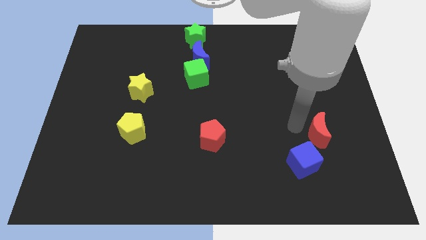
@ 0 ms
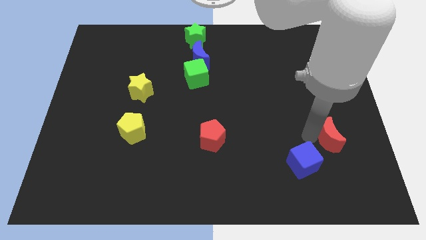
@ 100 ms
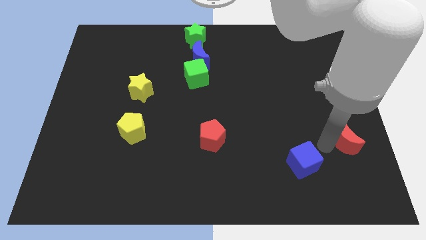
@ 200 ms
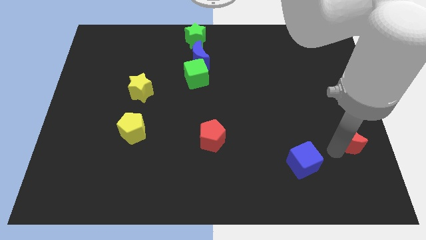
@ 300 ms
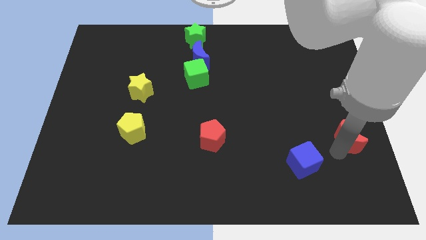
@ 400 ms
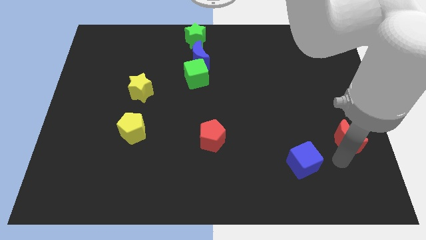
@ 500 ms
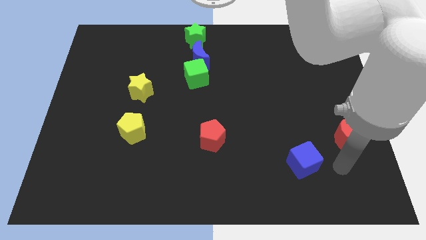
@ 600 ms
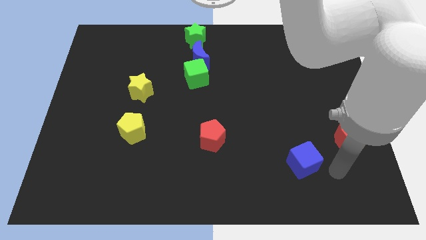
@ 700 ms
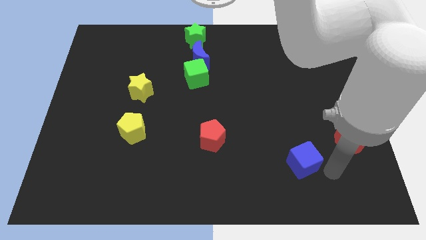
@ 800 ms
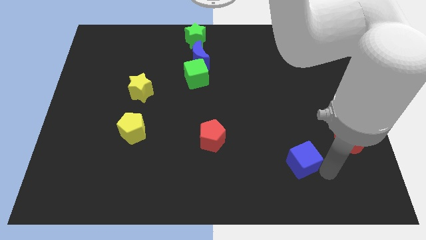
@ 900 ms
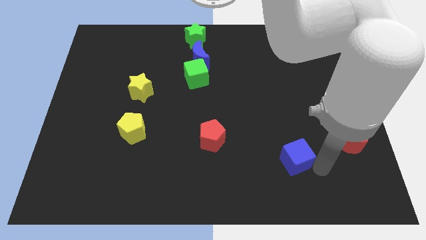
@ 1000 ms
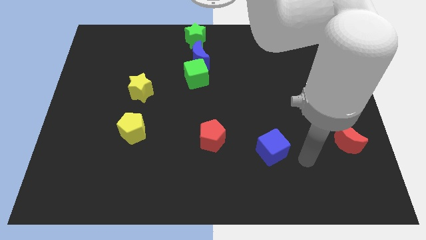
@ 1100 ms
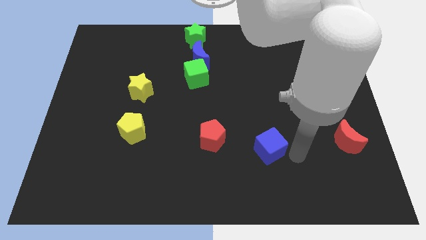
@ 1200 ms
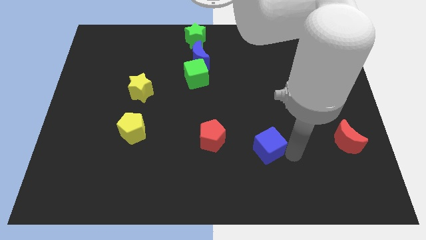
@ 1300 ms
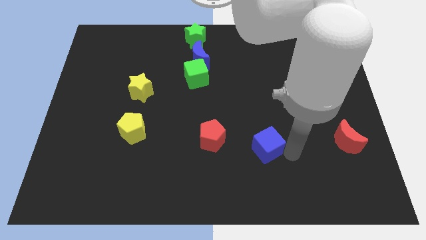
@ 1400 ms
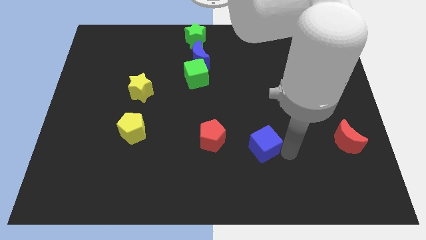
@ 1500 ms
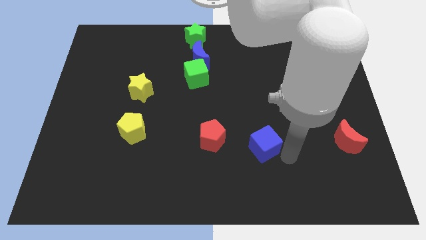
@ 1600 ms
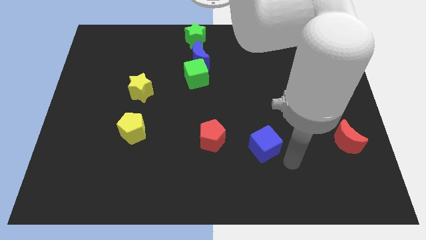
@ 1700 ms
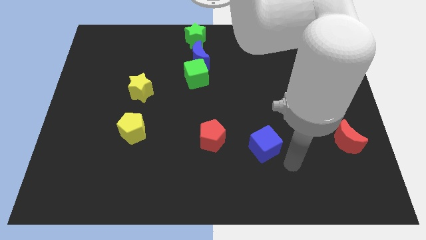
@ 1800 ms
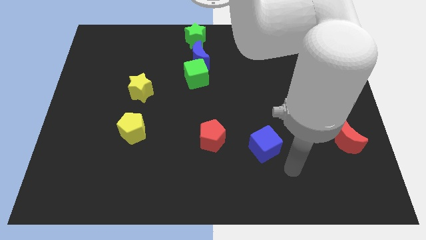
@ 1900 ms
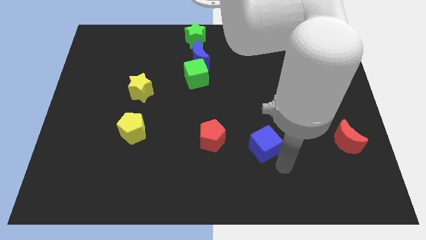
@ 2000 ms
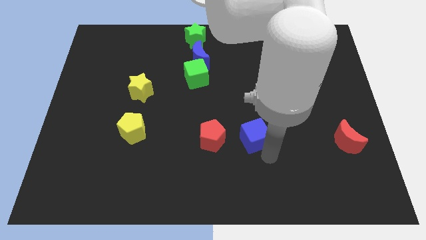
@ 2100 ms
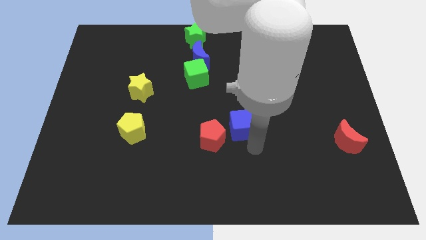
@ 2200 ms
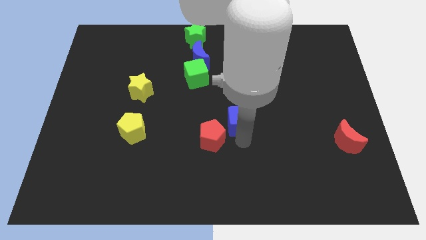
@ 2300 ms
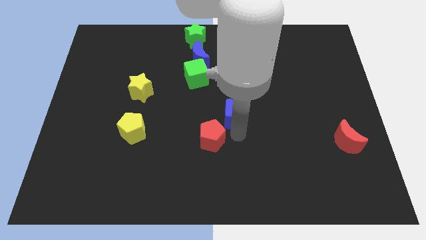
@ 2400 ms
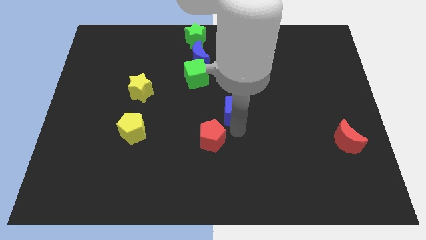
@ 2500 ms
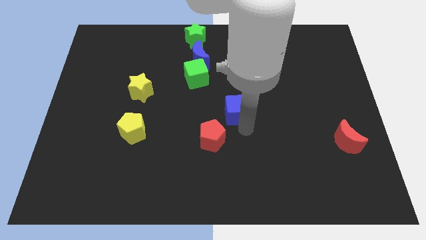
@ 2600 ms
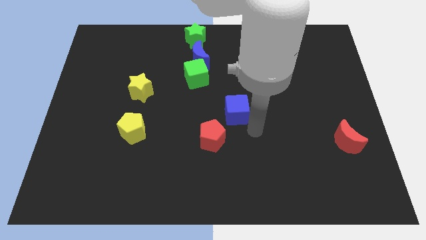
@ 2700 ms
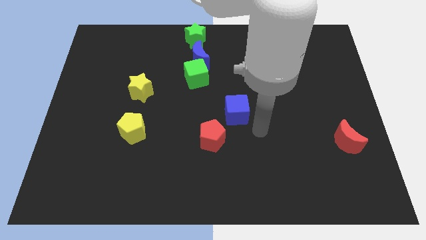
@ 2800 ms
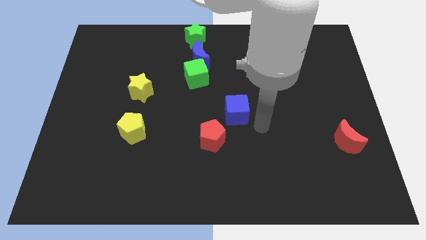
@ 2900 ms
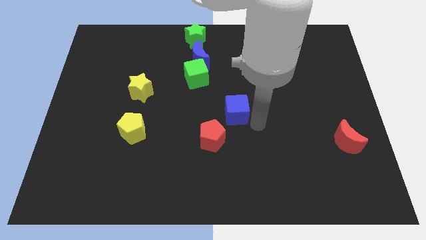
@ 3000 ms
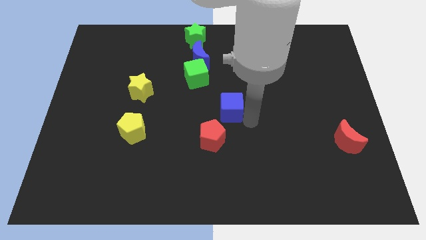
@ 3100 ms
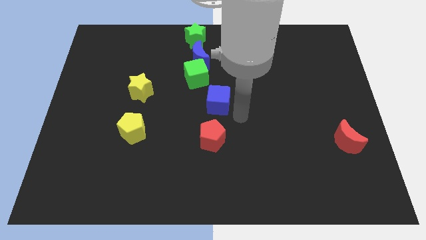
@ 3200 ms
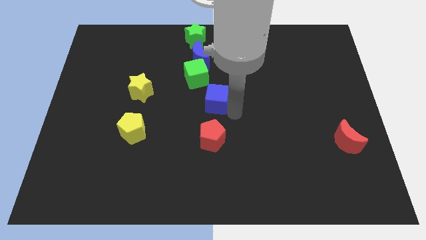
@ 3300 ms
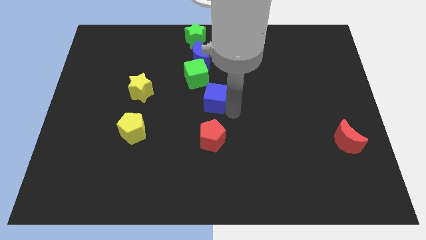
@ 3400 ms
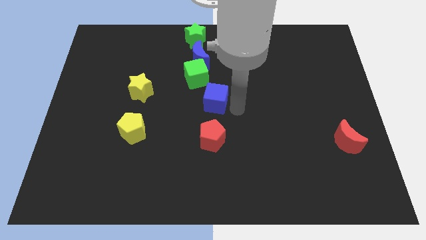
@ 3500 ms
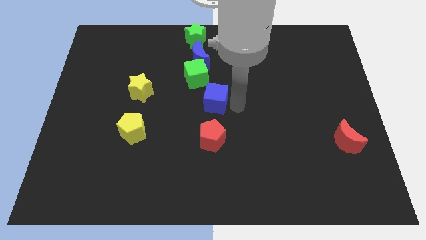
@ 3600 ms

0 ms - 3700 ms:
move the blue cube diagonally top right to yellow pentagon

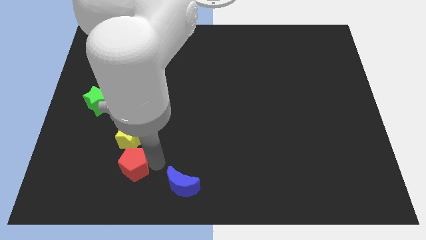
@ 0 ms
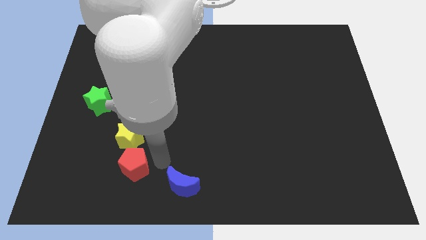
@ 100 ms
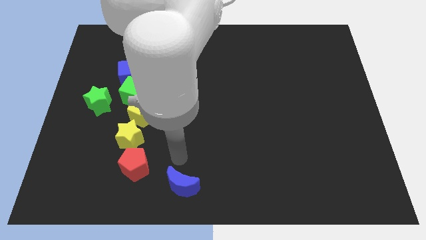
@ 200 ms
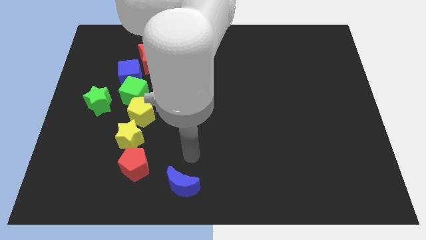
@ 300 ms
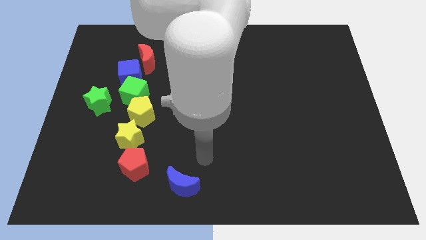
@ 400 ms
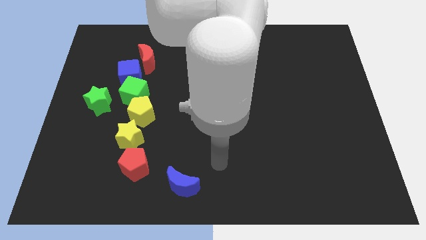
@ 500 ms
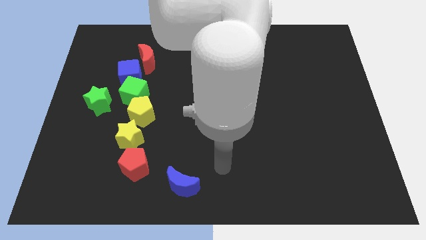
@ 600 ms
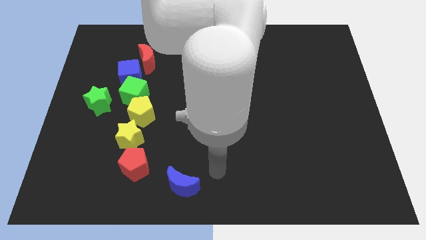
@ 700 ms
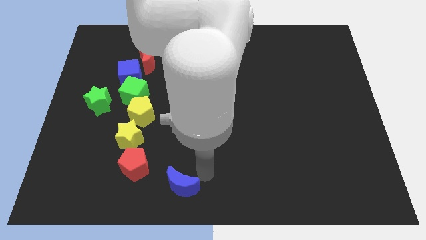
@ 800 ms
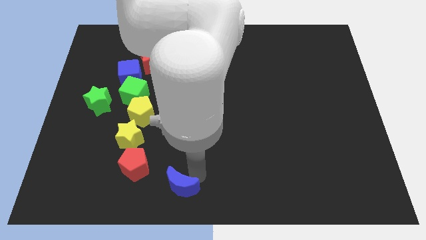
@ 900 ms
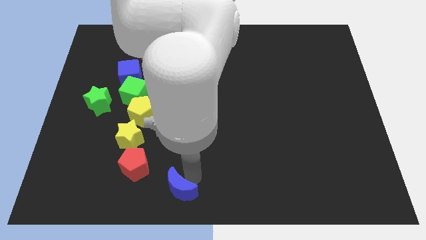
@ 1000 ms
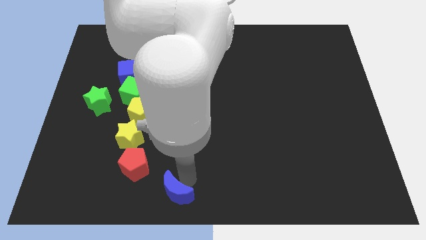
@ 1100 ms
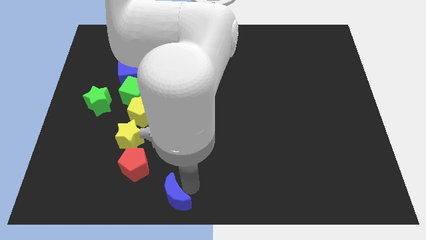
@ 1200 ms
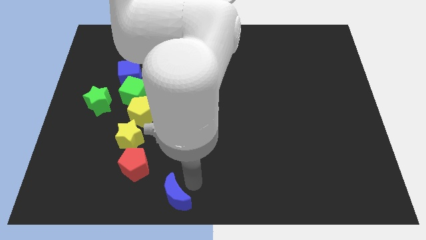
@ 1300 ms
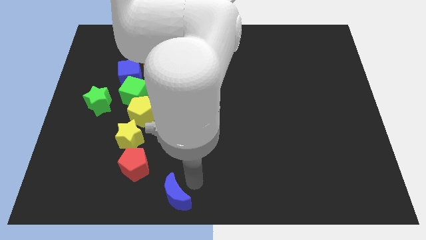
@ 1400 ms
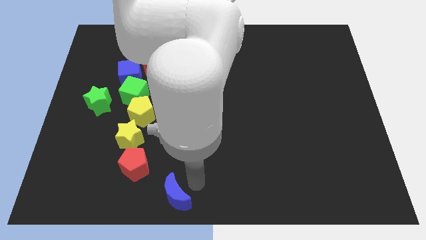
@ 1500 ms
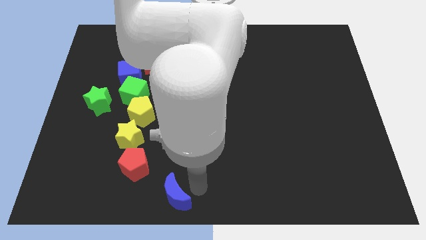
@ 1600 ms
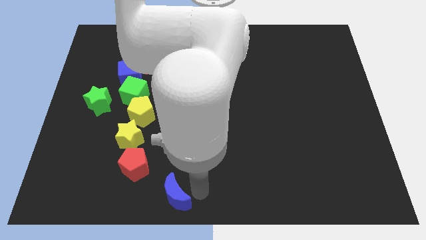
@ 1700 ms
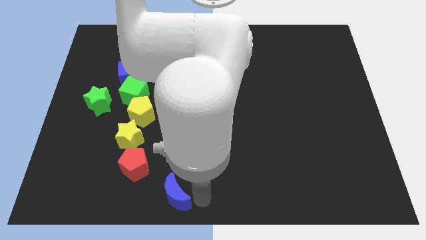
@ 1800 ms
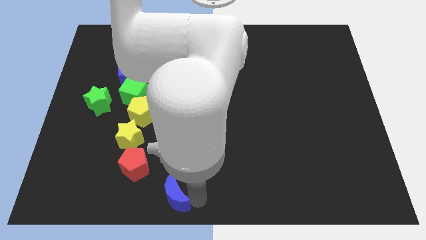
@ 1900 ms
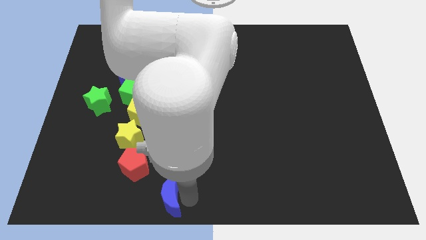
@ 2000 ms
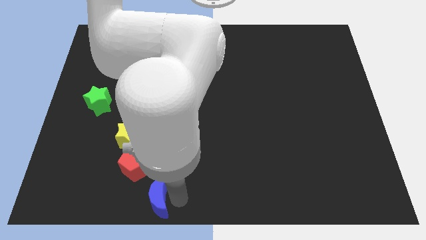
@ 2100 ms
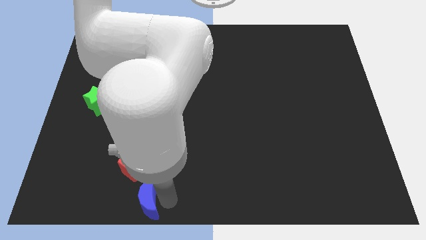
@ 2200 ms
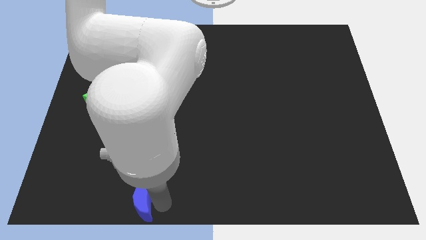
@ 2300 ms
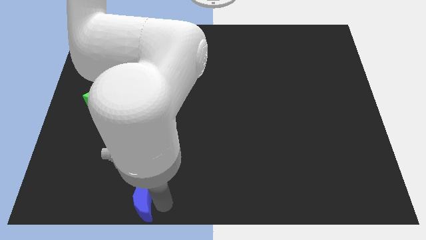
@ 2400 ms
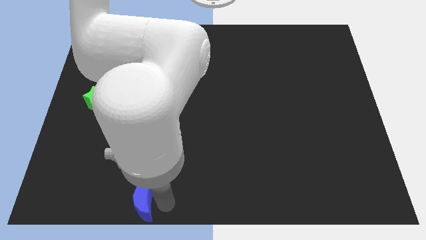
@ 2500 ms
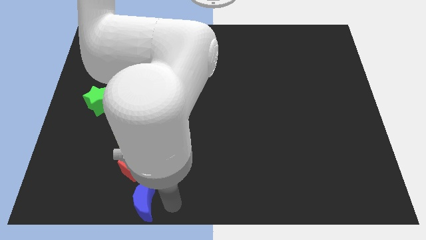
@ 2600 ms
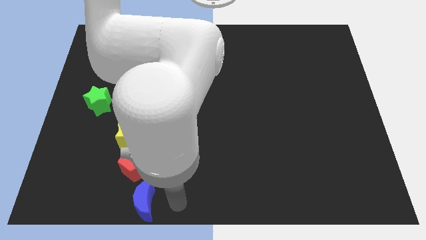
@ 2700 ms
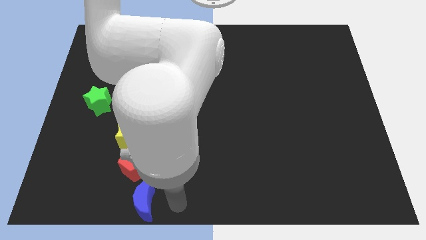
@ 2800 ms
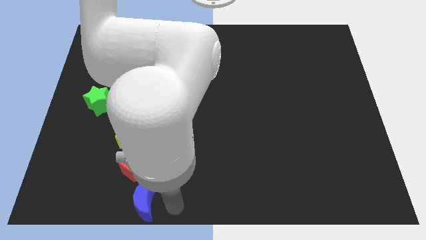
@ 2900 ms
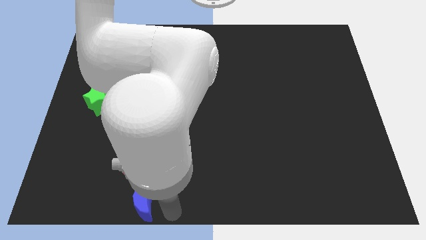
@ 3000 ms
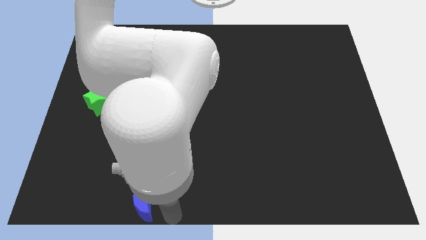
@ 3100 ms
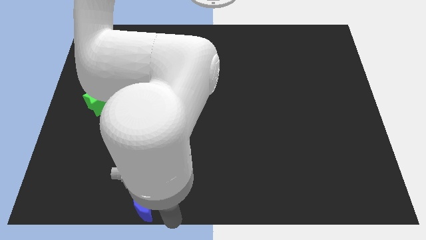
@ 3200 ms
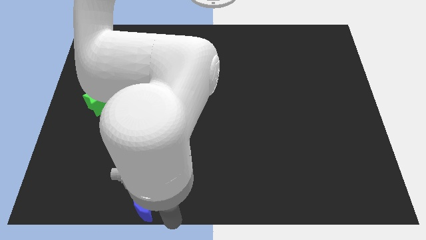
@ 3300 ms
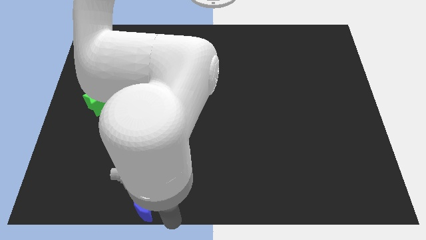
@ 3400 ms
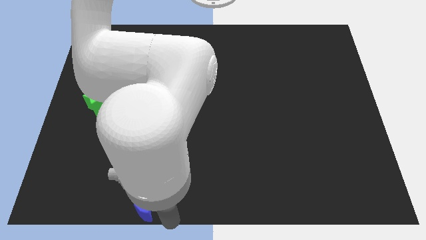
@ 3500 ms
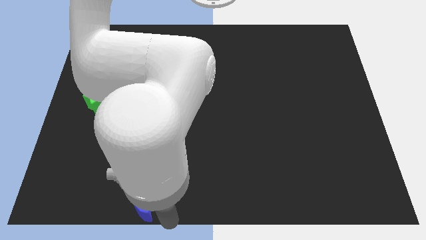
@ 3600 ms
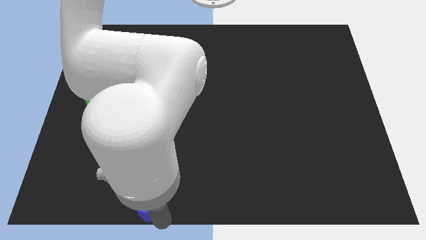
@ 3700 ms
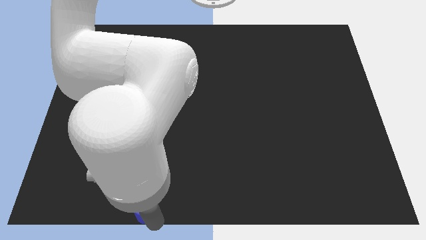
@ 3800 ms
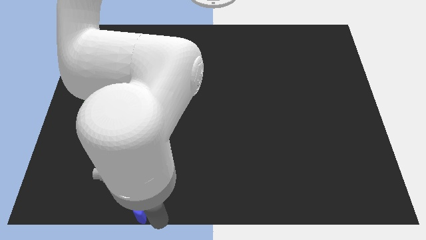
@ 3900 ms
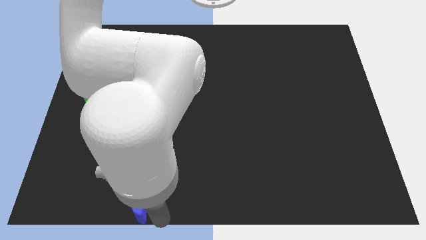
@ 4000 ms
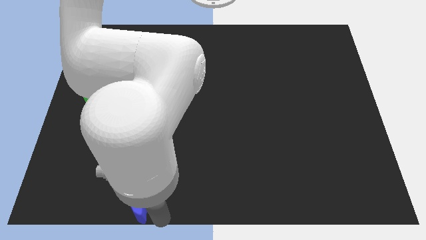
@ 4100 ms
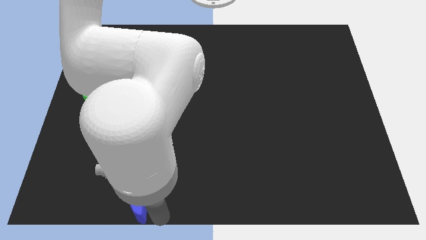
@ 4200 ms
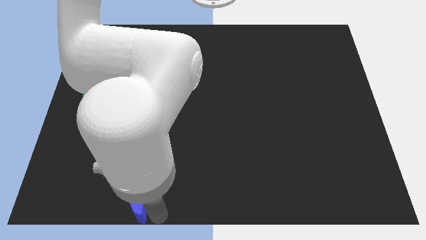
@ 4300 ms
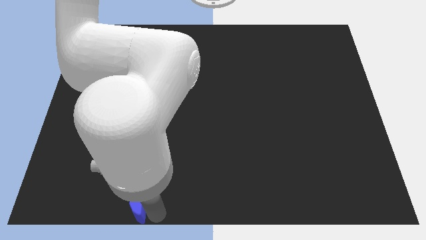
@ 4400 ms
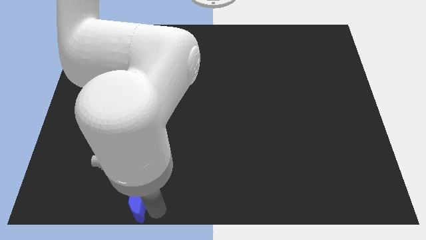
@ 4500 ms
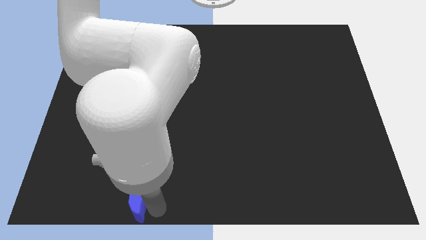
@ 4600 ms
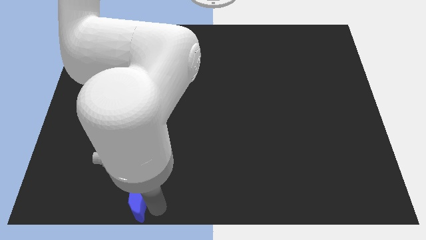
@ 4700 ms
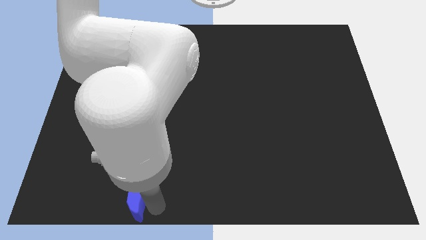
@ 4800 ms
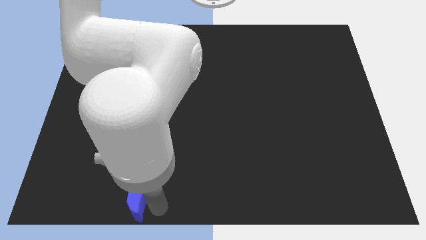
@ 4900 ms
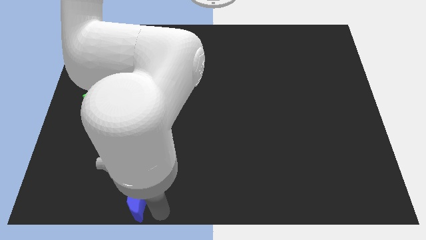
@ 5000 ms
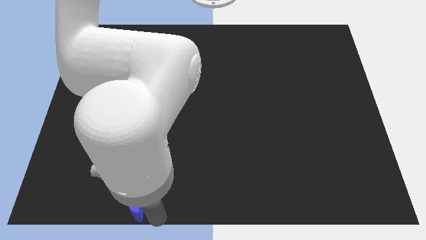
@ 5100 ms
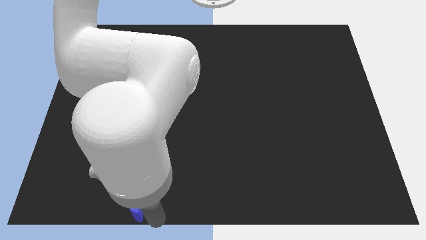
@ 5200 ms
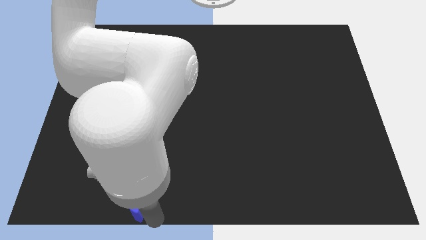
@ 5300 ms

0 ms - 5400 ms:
move blue crescent to the bottom of red pentagon
